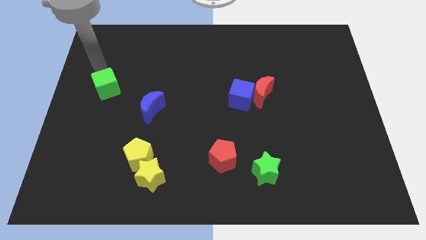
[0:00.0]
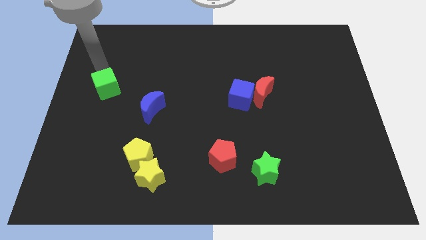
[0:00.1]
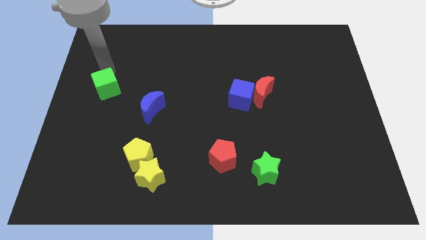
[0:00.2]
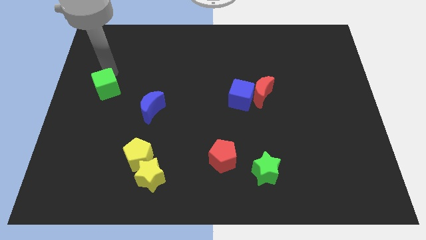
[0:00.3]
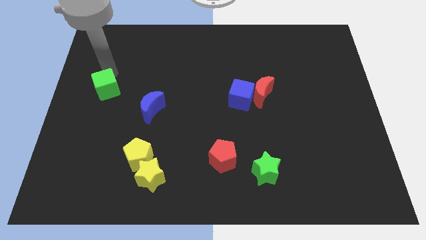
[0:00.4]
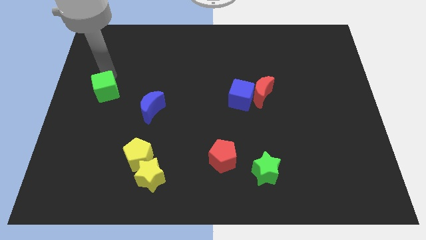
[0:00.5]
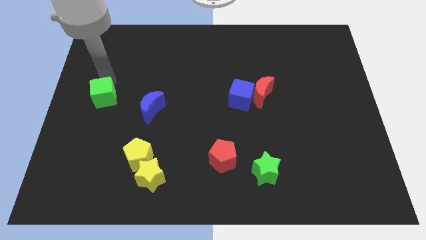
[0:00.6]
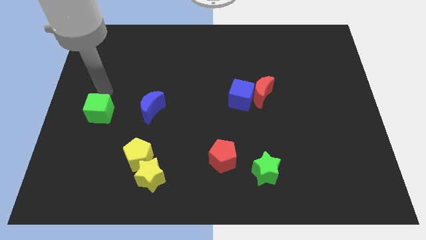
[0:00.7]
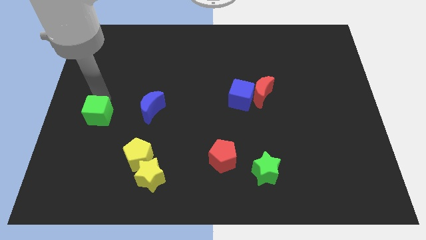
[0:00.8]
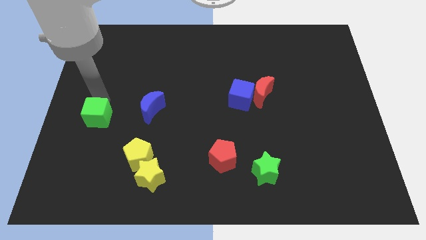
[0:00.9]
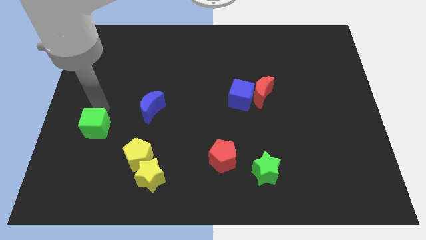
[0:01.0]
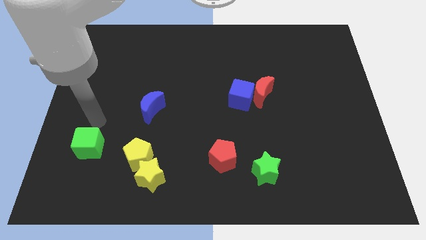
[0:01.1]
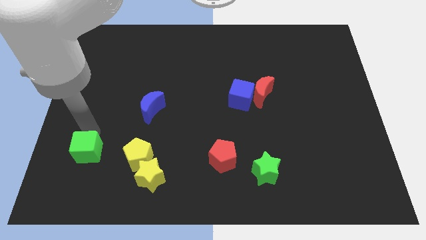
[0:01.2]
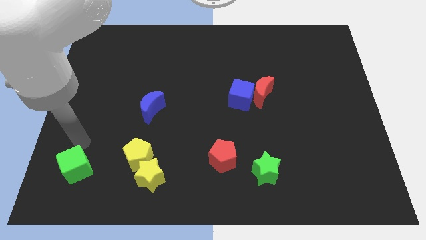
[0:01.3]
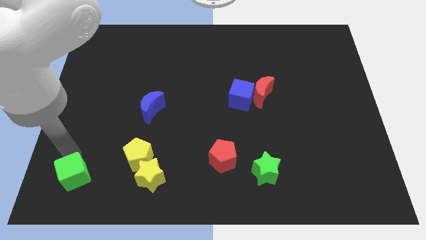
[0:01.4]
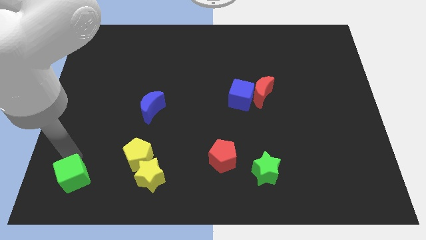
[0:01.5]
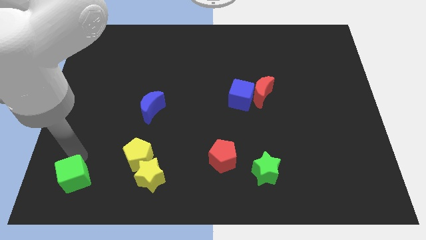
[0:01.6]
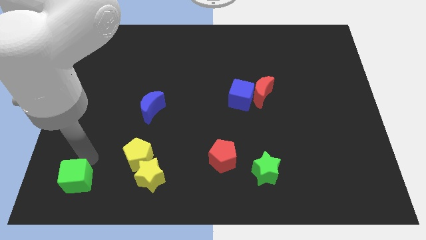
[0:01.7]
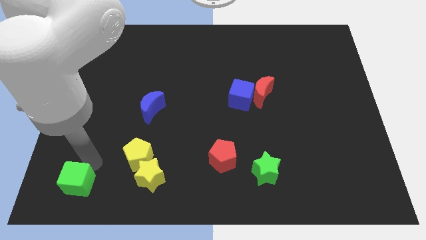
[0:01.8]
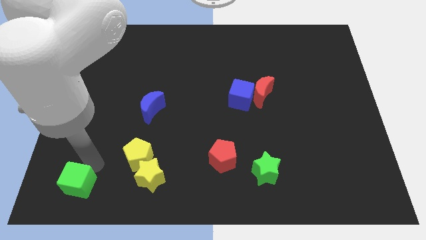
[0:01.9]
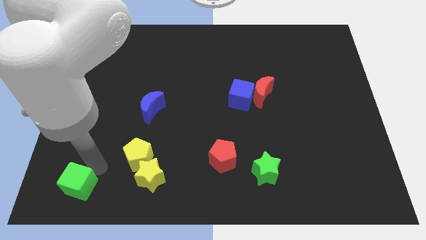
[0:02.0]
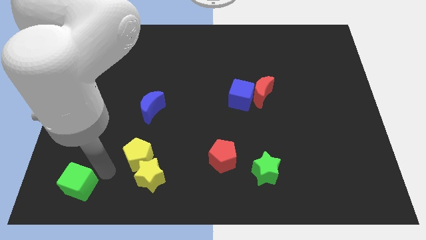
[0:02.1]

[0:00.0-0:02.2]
push the green cube to the left bottom

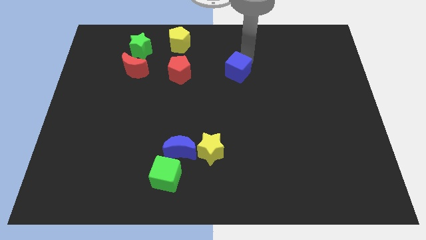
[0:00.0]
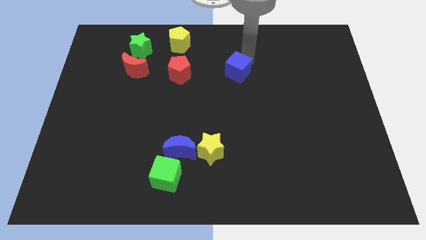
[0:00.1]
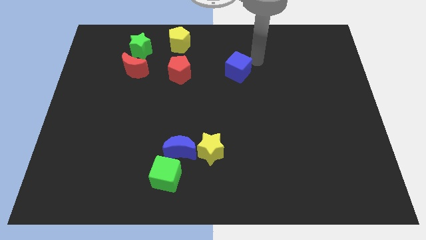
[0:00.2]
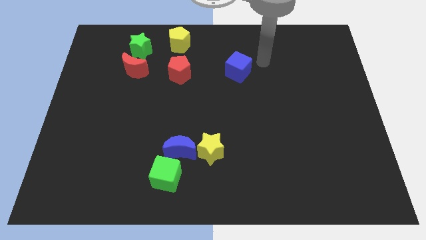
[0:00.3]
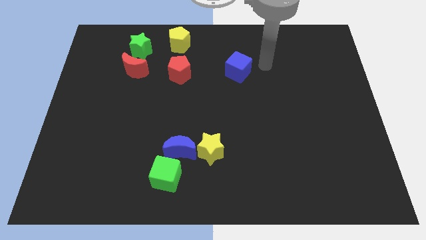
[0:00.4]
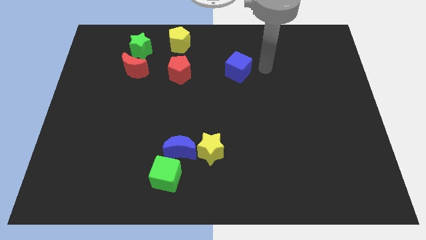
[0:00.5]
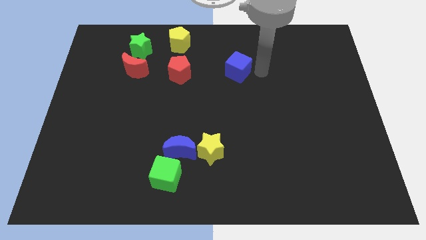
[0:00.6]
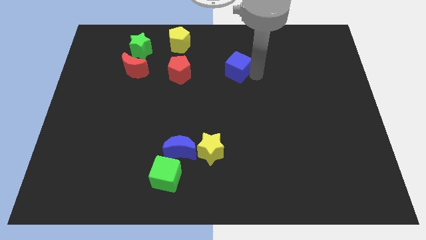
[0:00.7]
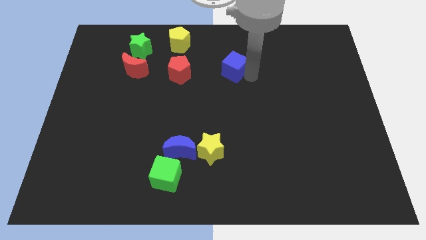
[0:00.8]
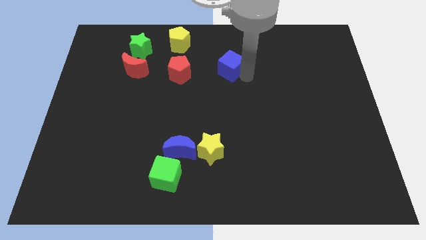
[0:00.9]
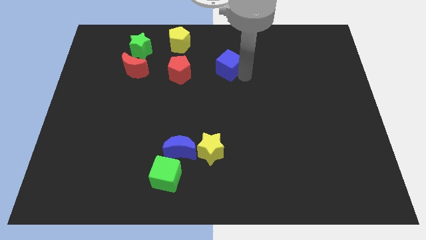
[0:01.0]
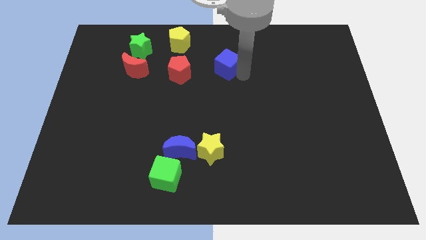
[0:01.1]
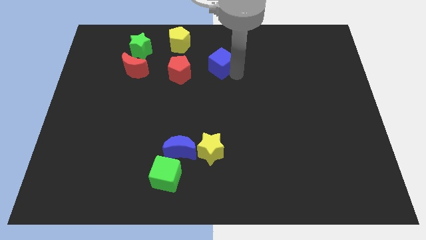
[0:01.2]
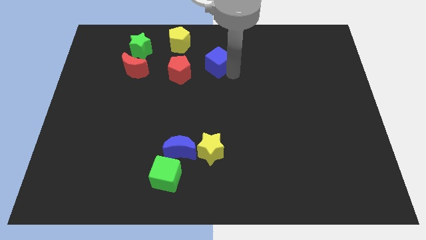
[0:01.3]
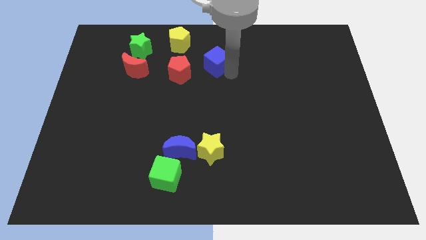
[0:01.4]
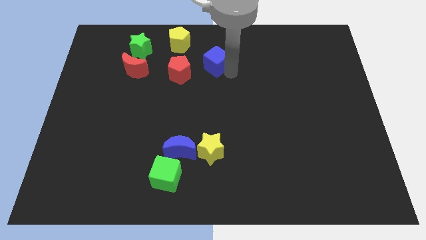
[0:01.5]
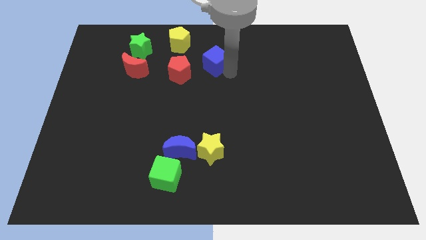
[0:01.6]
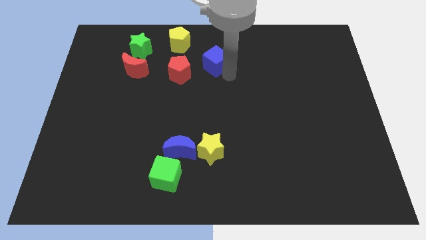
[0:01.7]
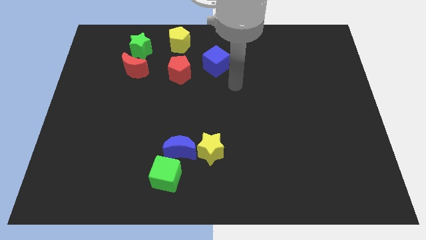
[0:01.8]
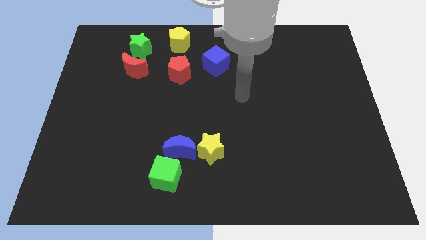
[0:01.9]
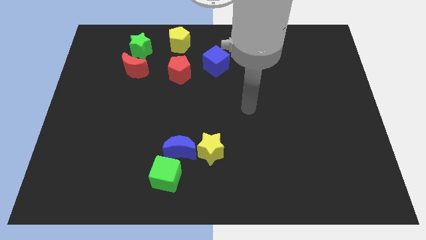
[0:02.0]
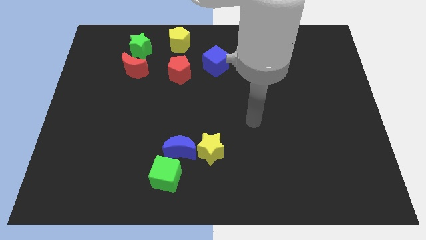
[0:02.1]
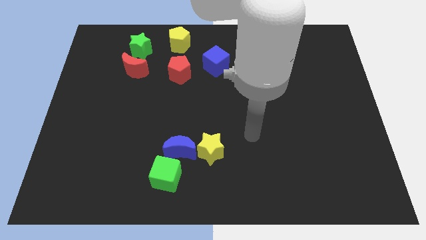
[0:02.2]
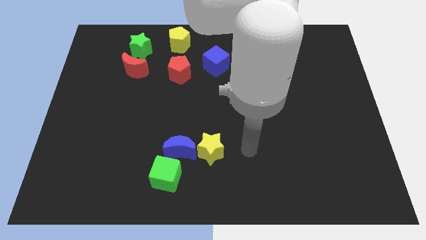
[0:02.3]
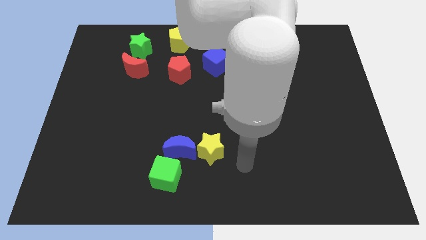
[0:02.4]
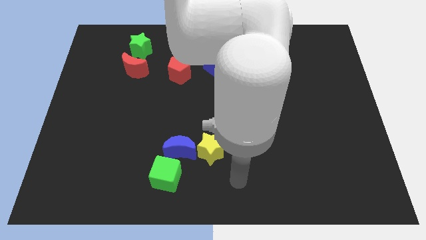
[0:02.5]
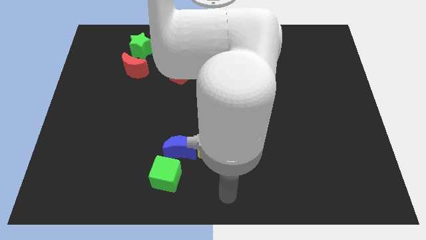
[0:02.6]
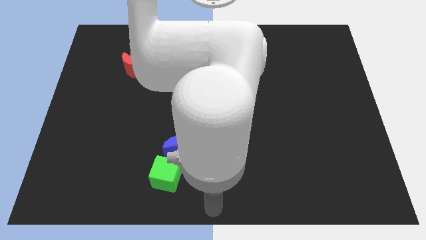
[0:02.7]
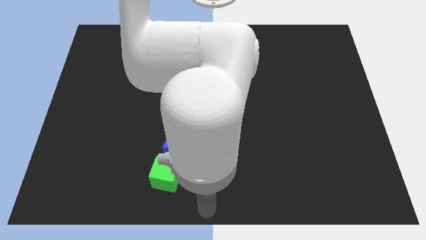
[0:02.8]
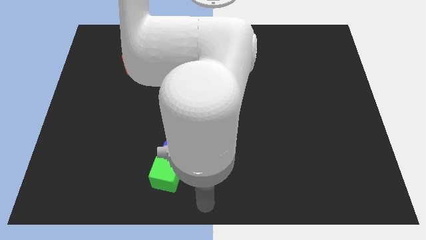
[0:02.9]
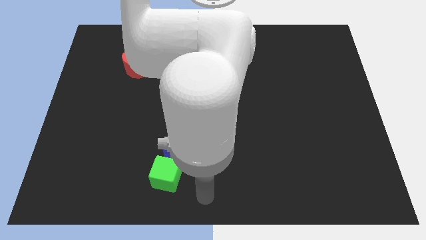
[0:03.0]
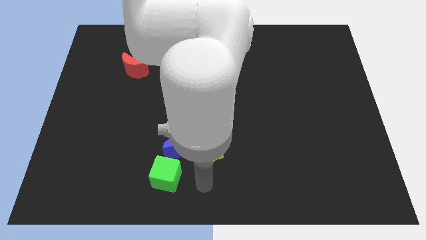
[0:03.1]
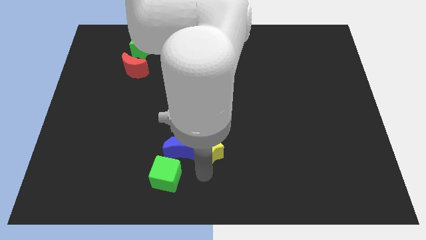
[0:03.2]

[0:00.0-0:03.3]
place the arm to the bottom of the yellow star

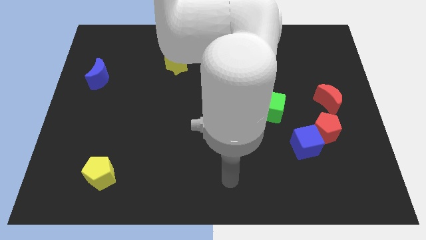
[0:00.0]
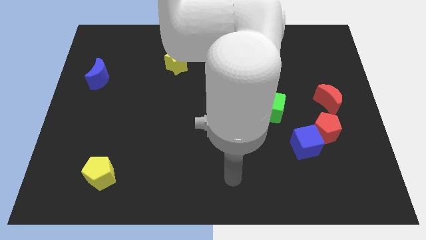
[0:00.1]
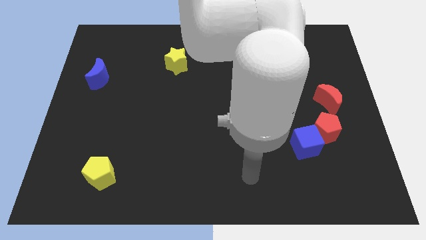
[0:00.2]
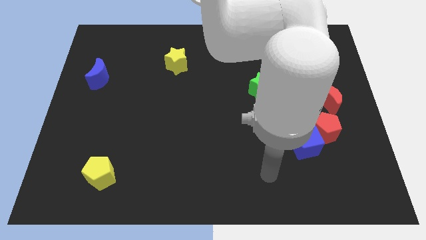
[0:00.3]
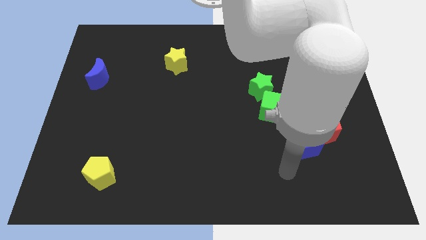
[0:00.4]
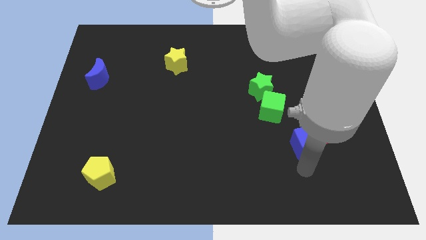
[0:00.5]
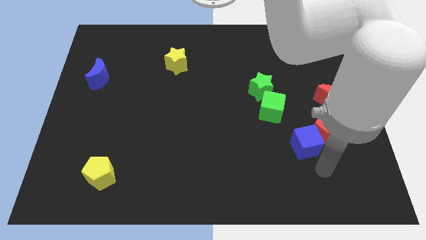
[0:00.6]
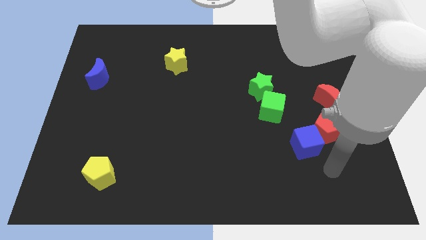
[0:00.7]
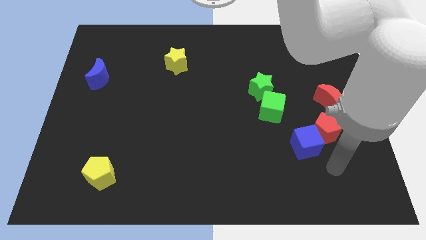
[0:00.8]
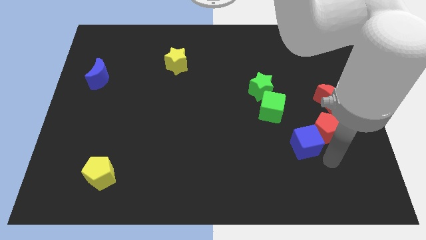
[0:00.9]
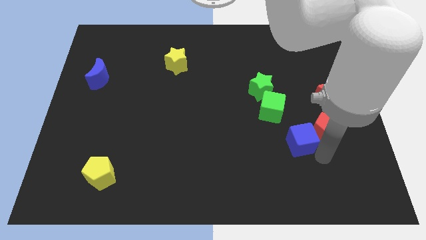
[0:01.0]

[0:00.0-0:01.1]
slightly move the blue cube towards the top side

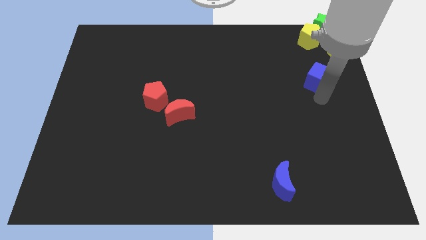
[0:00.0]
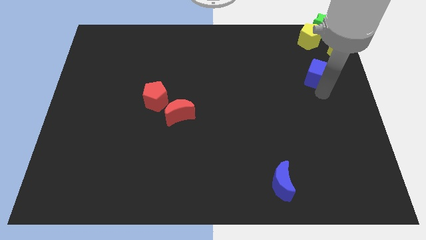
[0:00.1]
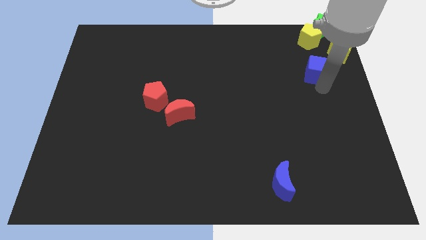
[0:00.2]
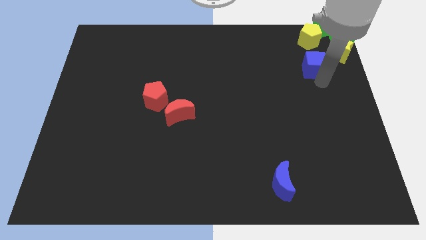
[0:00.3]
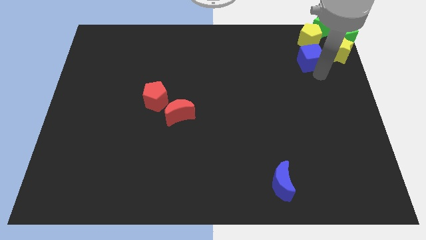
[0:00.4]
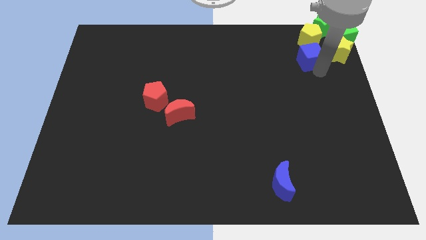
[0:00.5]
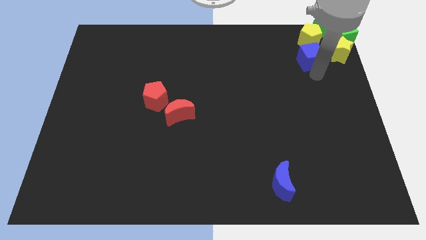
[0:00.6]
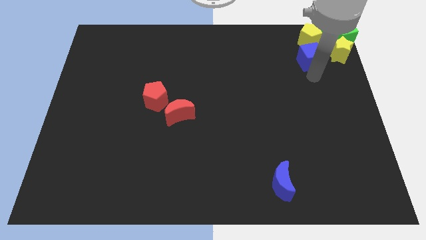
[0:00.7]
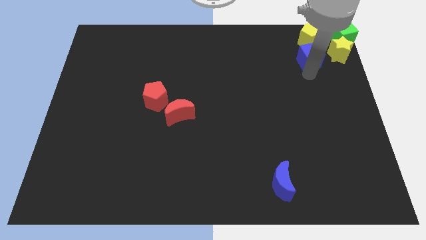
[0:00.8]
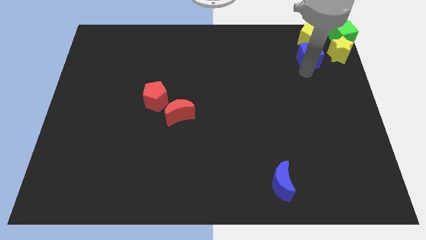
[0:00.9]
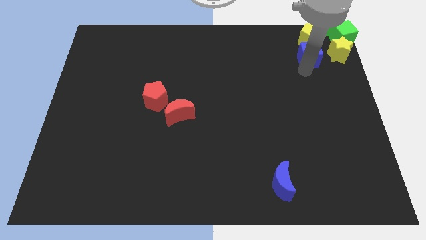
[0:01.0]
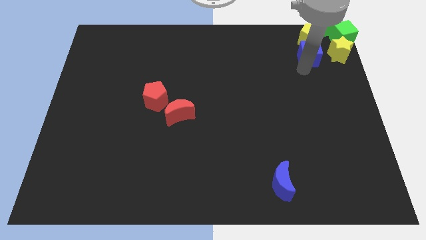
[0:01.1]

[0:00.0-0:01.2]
push the blue cube below the yellow pentagon

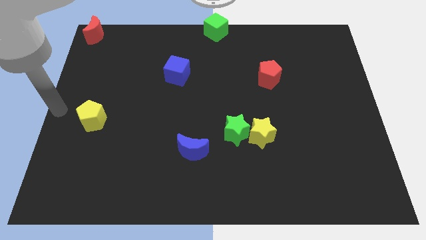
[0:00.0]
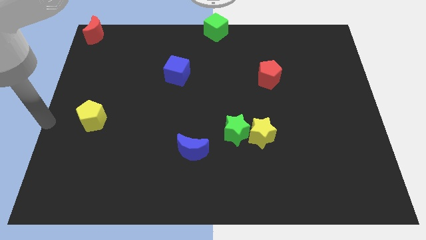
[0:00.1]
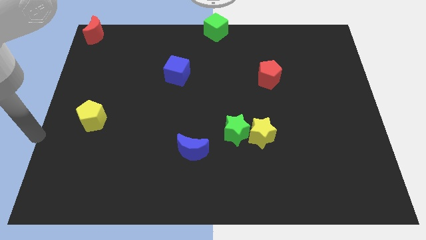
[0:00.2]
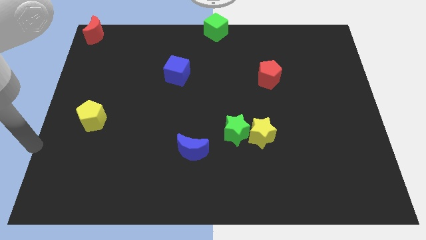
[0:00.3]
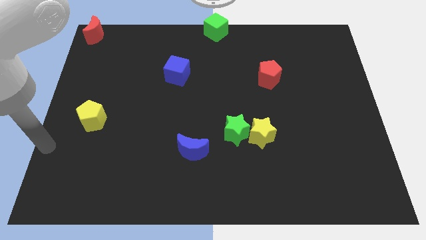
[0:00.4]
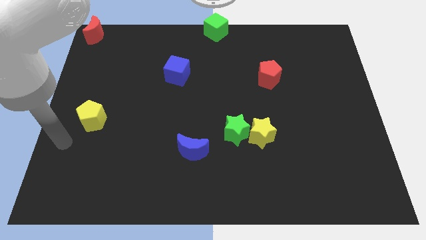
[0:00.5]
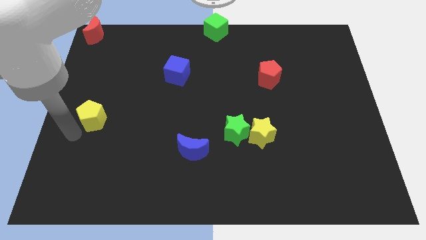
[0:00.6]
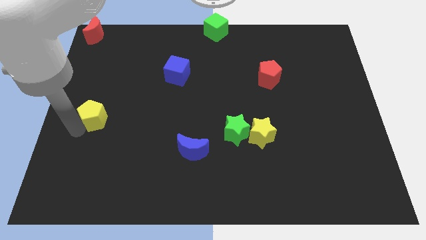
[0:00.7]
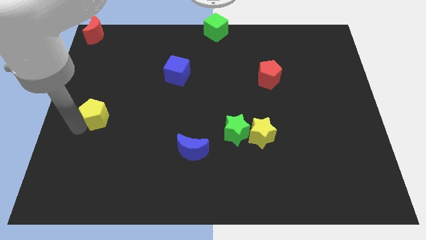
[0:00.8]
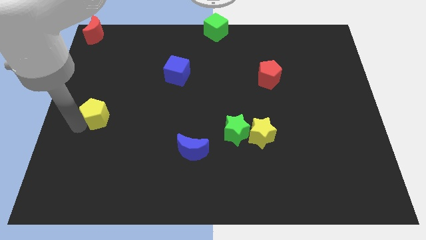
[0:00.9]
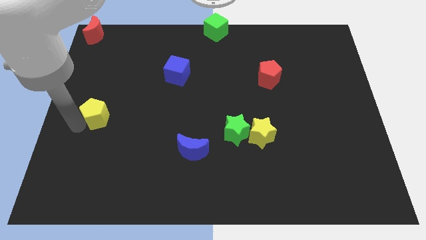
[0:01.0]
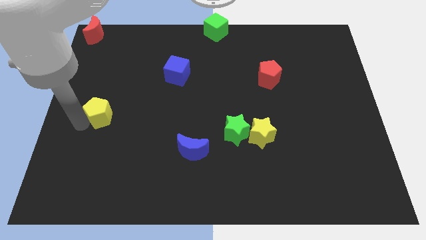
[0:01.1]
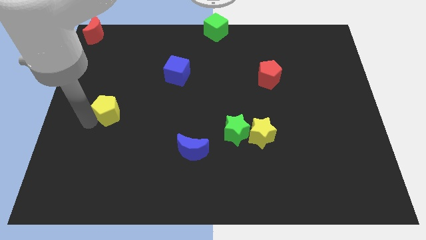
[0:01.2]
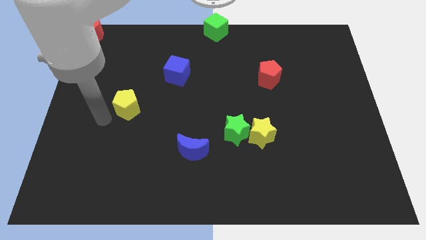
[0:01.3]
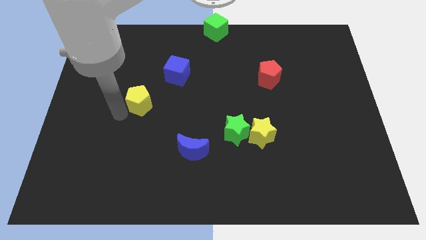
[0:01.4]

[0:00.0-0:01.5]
place the yellow pentagon diagonally bottom left to the blue cube
